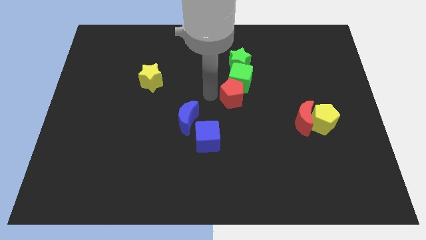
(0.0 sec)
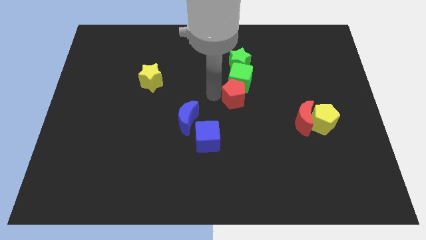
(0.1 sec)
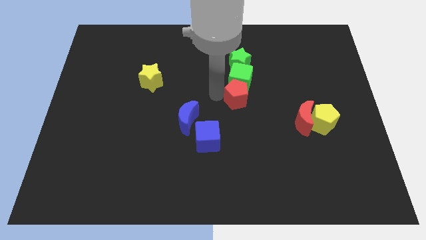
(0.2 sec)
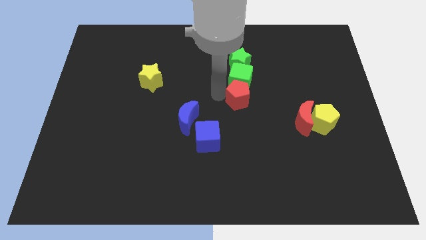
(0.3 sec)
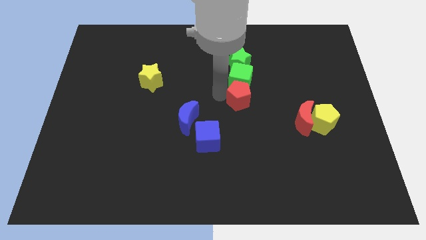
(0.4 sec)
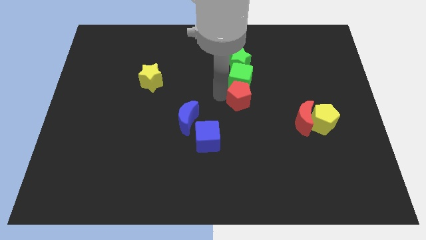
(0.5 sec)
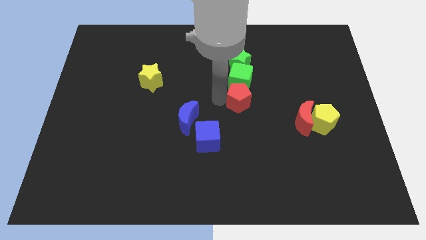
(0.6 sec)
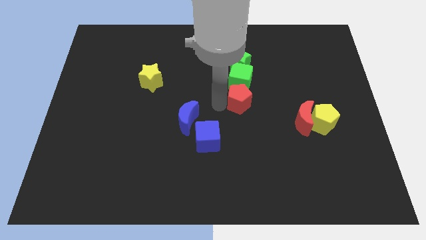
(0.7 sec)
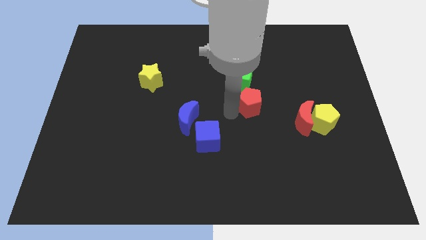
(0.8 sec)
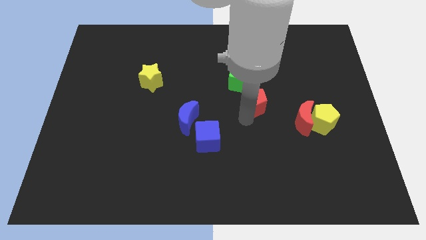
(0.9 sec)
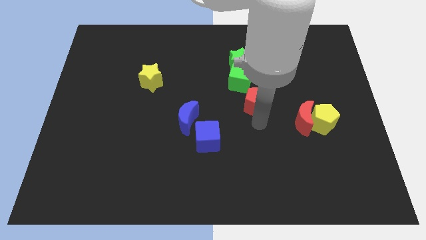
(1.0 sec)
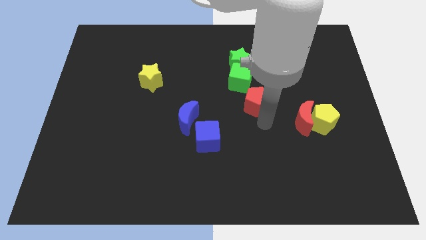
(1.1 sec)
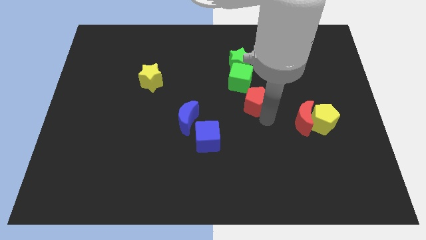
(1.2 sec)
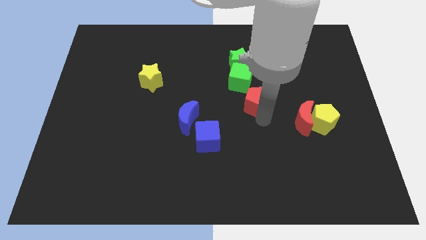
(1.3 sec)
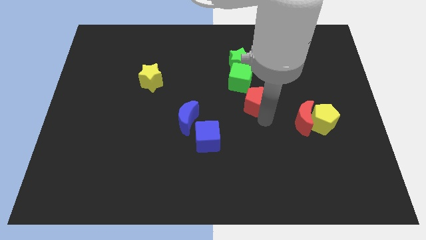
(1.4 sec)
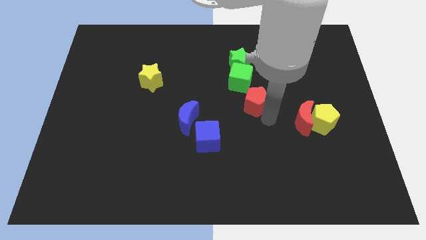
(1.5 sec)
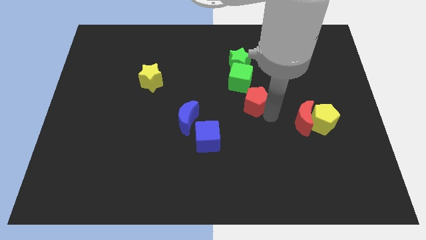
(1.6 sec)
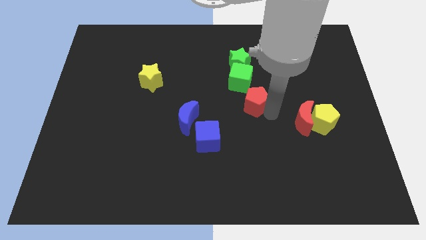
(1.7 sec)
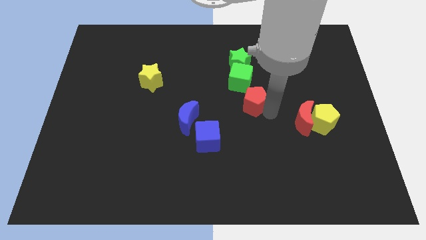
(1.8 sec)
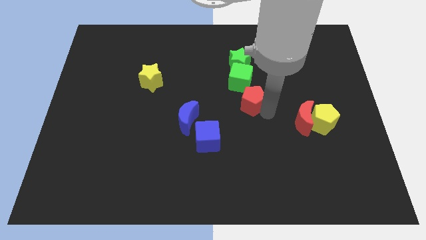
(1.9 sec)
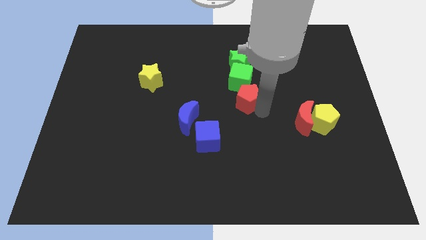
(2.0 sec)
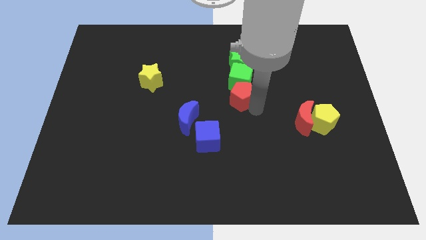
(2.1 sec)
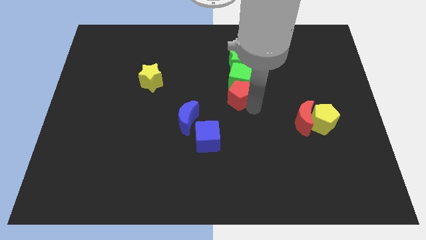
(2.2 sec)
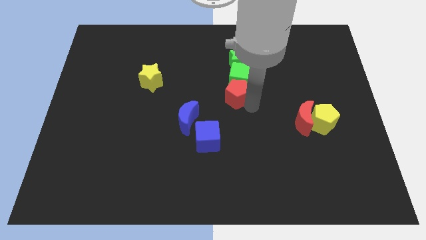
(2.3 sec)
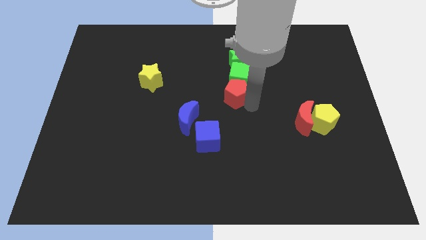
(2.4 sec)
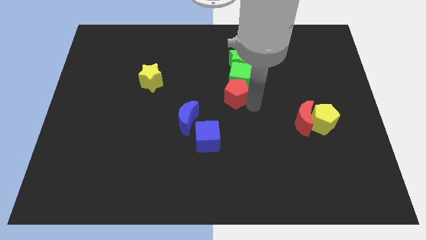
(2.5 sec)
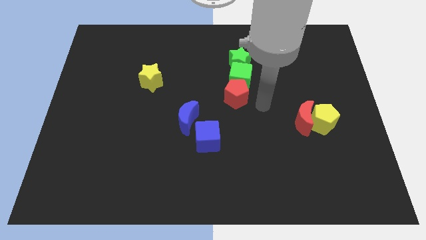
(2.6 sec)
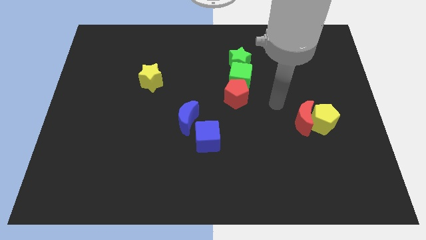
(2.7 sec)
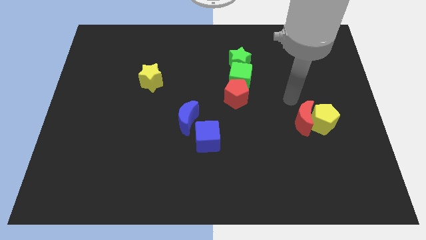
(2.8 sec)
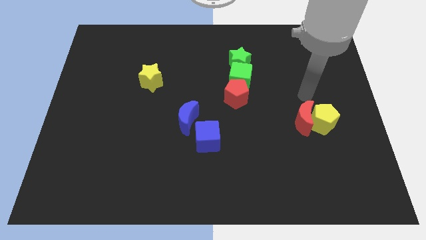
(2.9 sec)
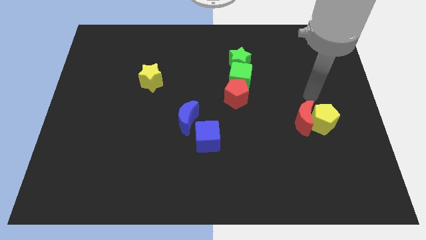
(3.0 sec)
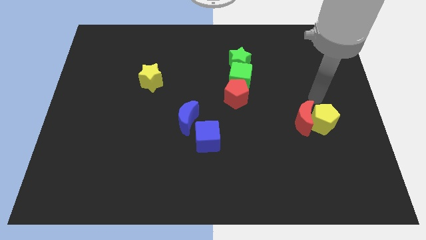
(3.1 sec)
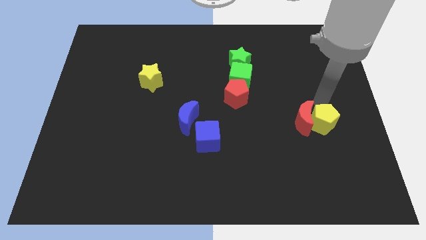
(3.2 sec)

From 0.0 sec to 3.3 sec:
slide the red pentagon diagonally on the top right side of the blue moon

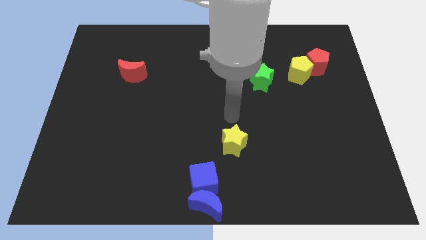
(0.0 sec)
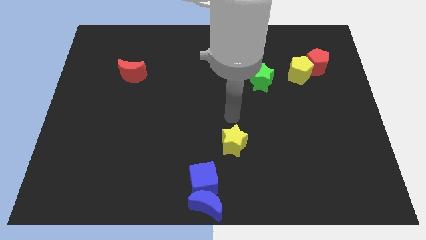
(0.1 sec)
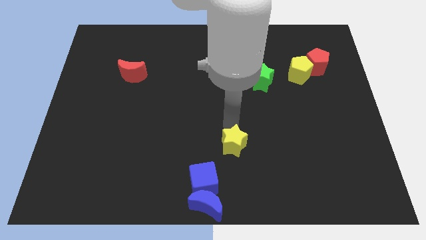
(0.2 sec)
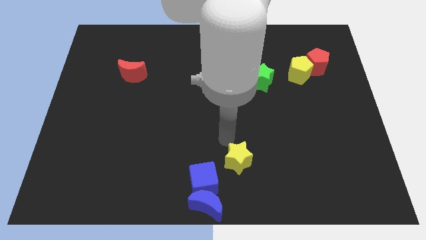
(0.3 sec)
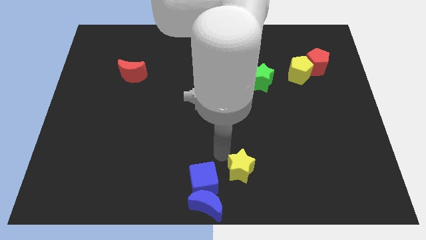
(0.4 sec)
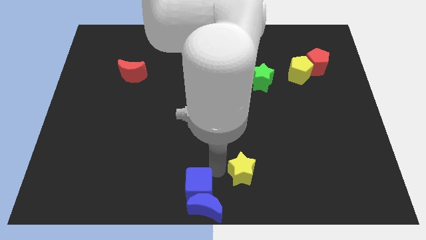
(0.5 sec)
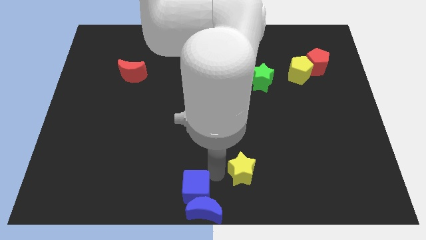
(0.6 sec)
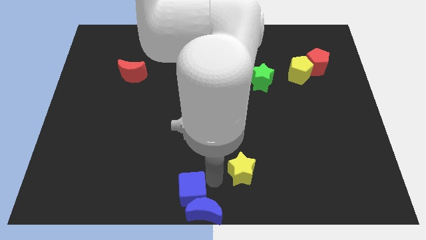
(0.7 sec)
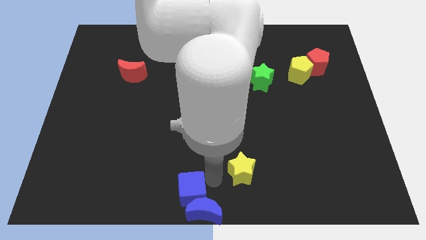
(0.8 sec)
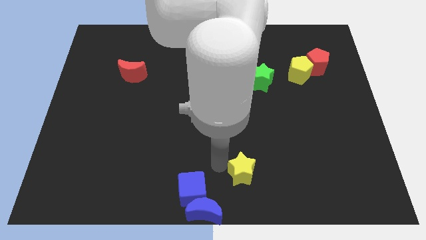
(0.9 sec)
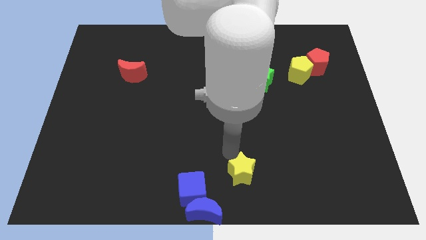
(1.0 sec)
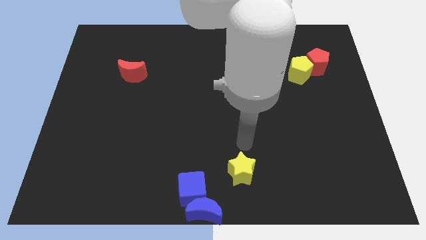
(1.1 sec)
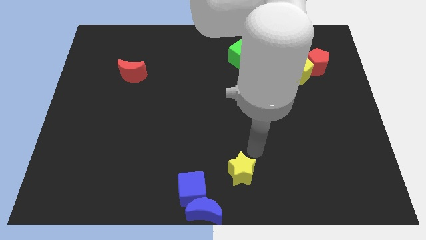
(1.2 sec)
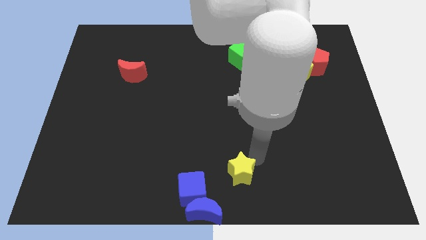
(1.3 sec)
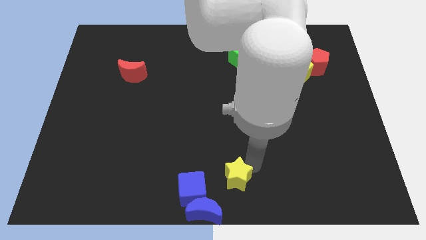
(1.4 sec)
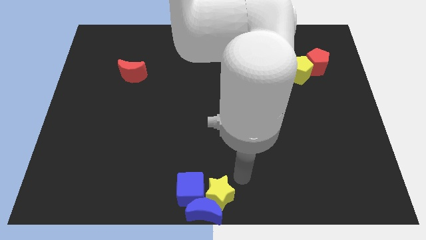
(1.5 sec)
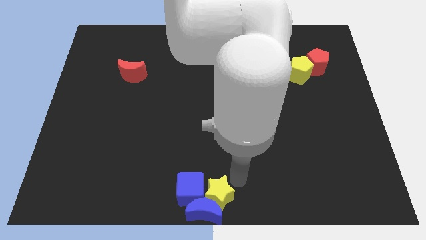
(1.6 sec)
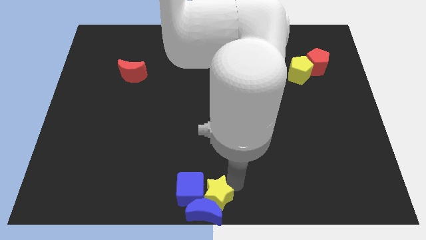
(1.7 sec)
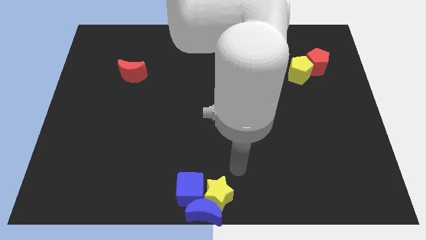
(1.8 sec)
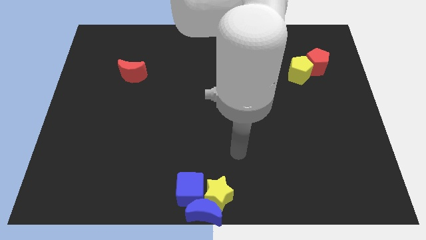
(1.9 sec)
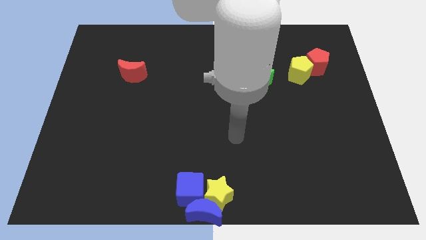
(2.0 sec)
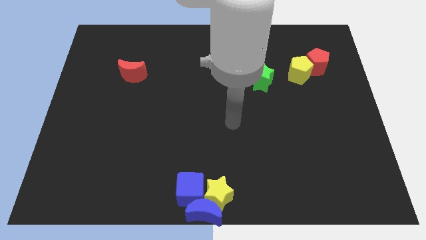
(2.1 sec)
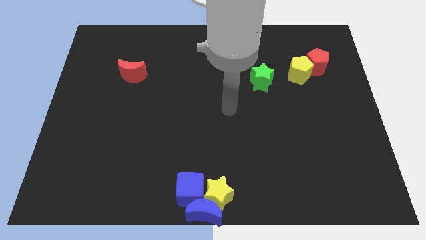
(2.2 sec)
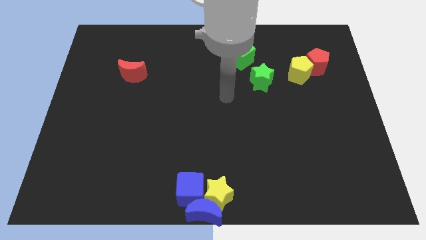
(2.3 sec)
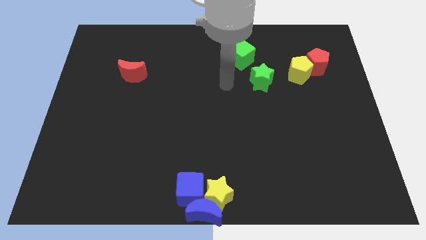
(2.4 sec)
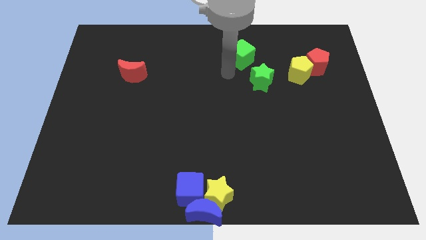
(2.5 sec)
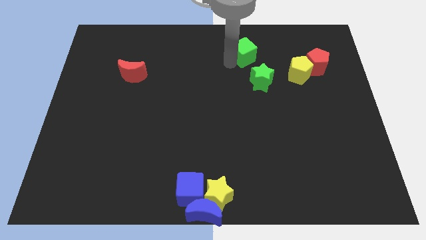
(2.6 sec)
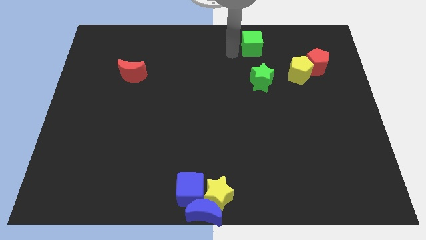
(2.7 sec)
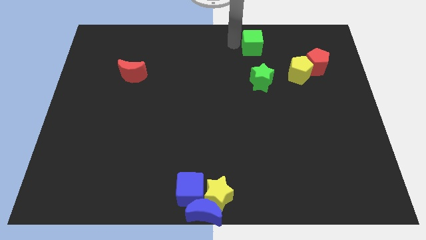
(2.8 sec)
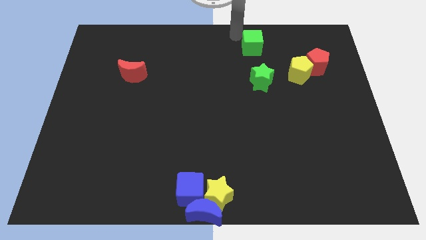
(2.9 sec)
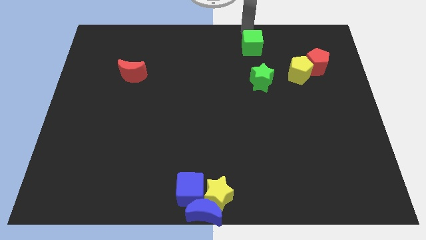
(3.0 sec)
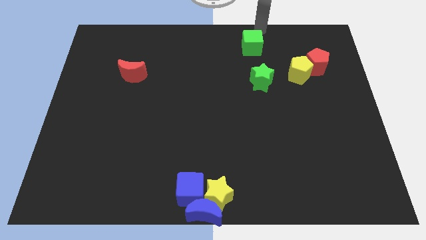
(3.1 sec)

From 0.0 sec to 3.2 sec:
push the yellow star into the blue moon

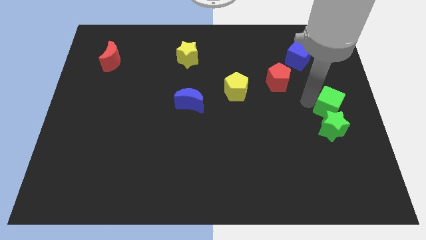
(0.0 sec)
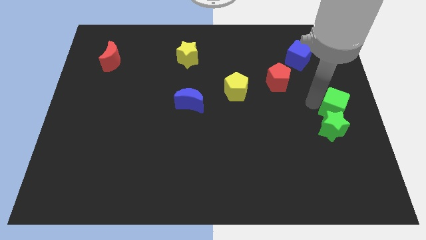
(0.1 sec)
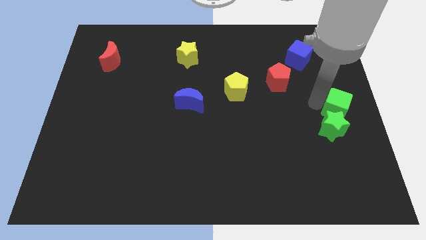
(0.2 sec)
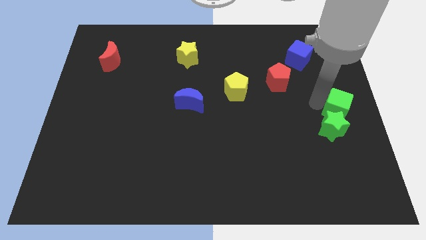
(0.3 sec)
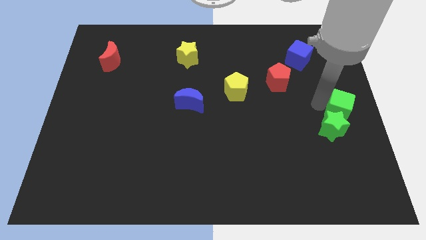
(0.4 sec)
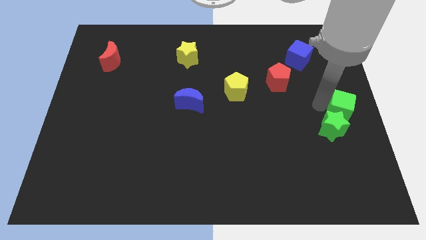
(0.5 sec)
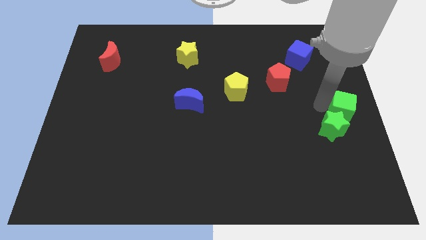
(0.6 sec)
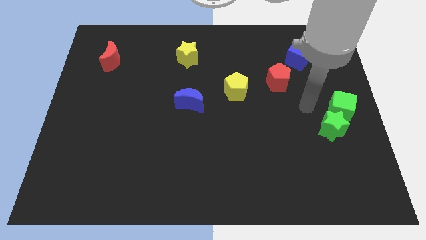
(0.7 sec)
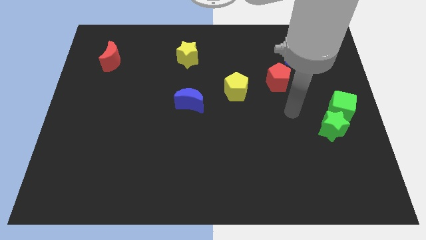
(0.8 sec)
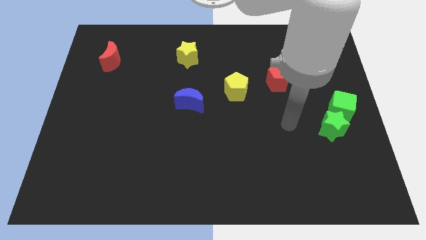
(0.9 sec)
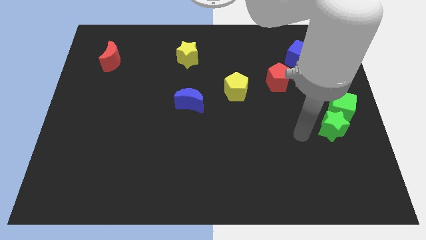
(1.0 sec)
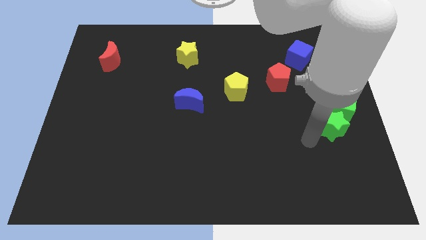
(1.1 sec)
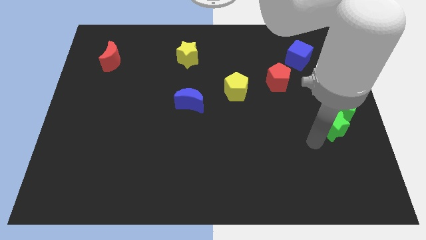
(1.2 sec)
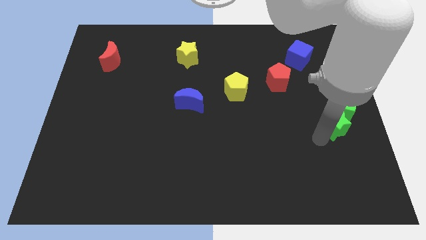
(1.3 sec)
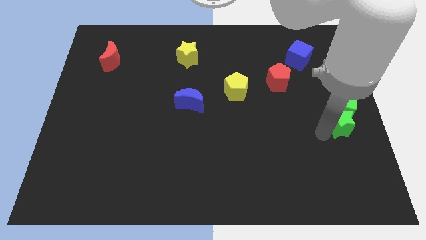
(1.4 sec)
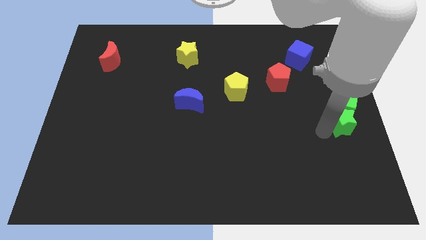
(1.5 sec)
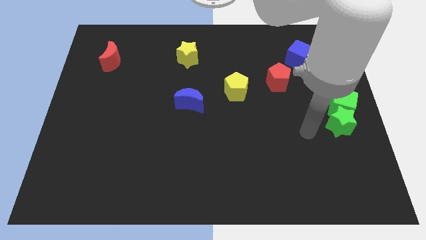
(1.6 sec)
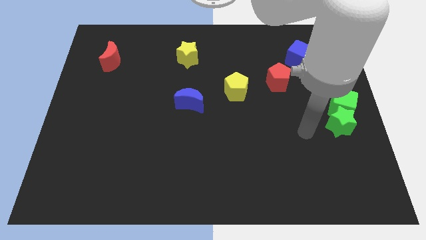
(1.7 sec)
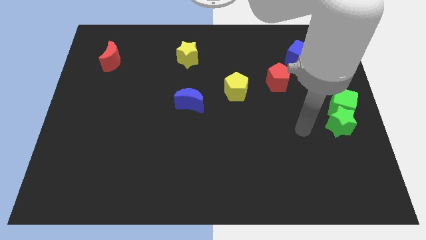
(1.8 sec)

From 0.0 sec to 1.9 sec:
place both the green star and green cube at the right center of the board

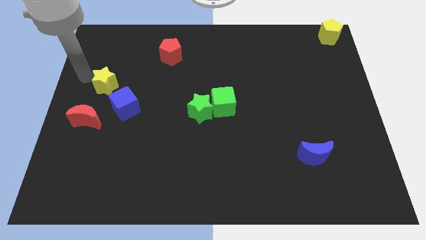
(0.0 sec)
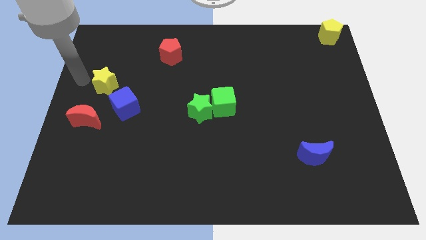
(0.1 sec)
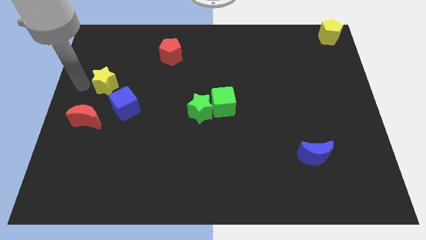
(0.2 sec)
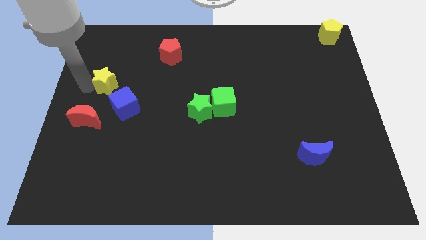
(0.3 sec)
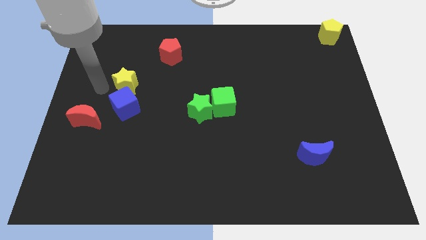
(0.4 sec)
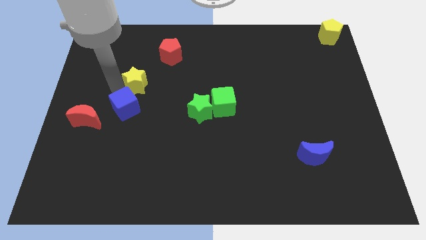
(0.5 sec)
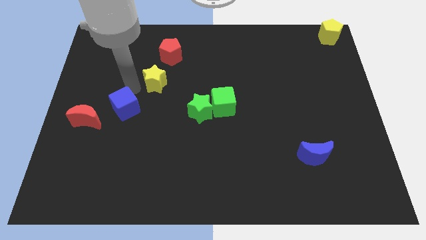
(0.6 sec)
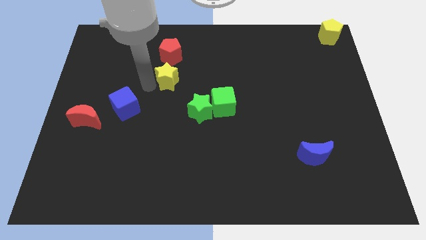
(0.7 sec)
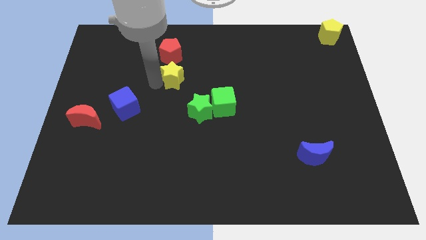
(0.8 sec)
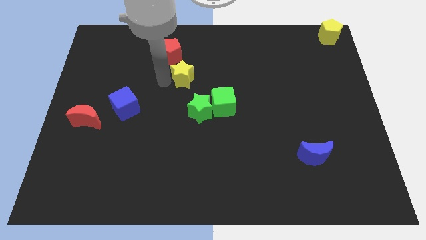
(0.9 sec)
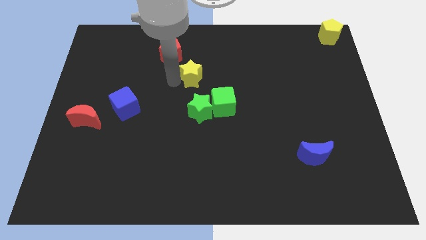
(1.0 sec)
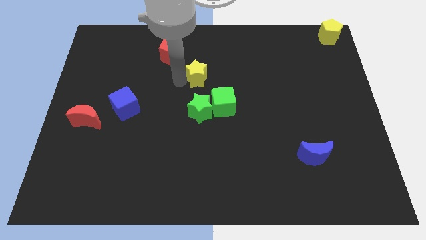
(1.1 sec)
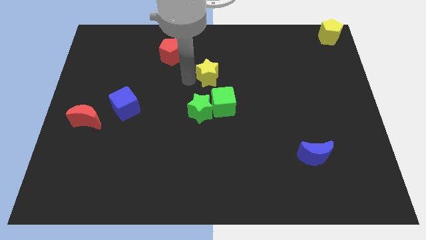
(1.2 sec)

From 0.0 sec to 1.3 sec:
push the yellow star to the top of the green star
